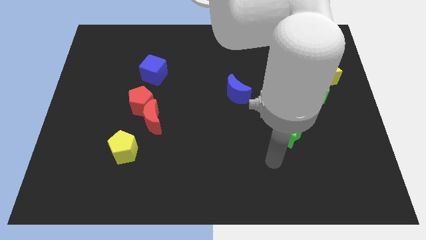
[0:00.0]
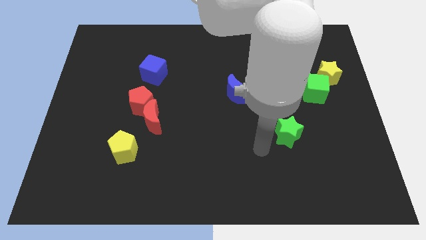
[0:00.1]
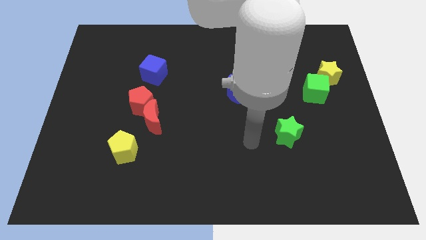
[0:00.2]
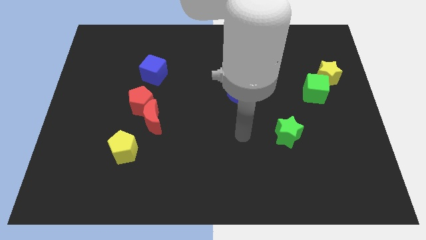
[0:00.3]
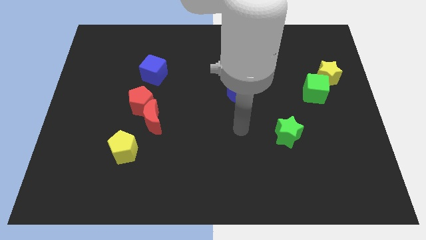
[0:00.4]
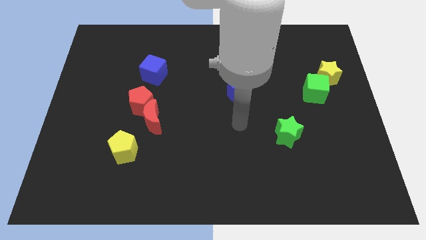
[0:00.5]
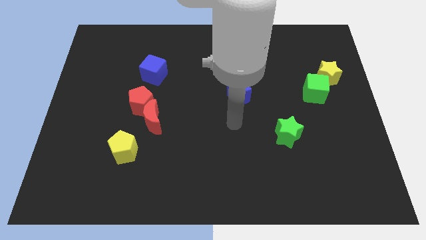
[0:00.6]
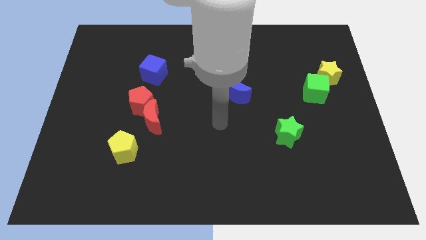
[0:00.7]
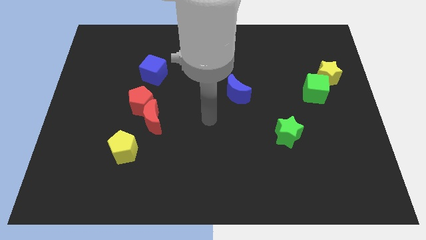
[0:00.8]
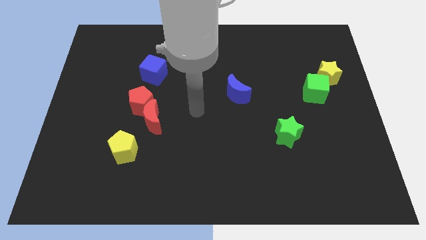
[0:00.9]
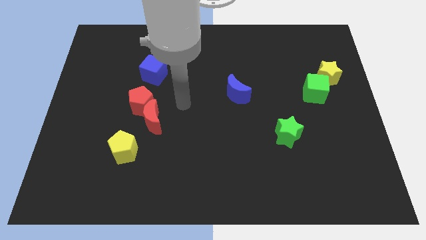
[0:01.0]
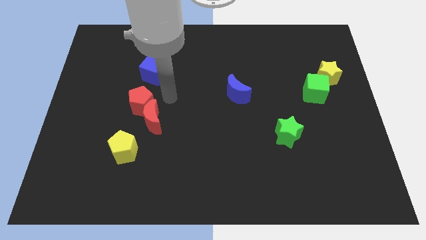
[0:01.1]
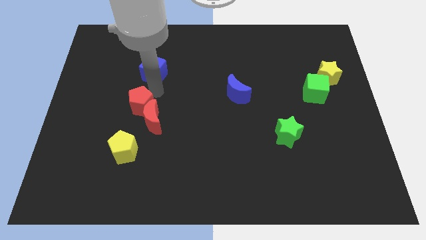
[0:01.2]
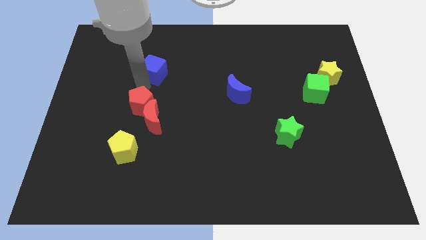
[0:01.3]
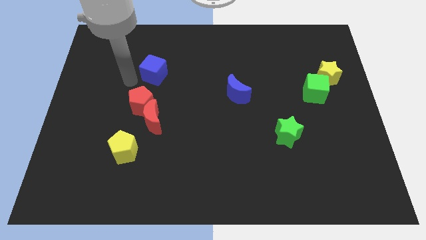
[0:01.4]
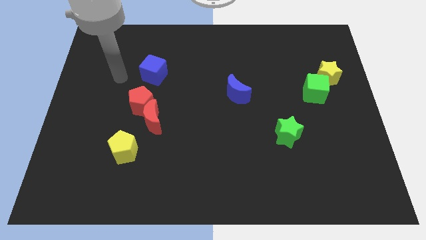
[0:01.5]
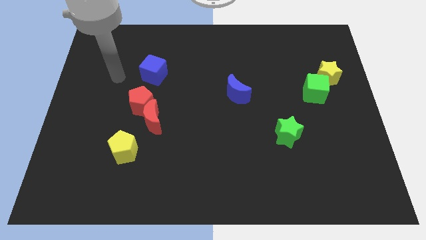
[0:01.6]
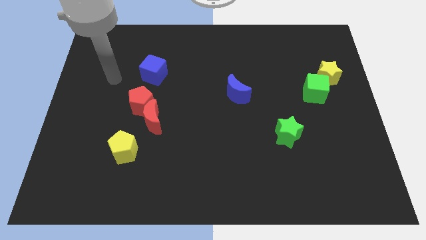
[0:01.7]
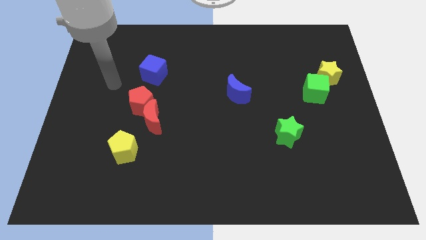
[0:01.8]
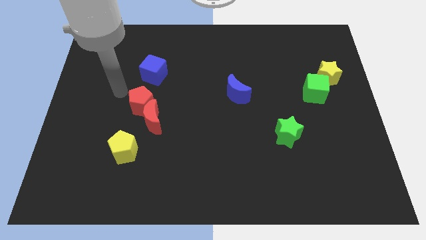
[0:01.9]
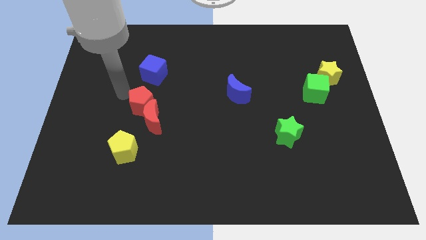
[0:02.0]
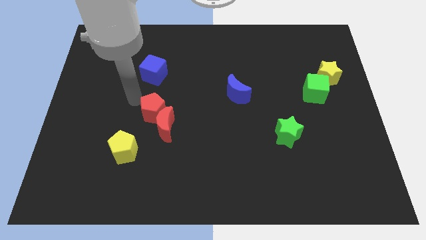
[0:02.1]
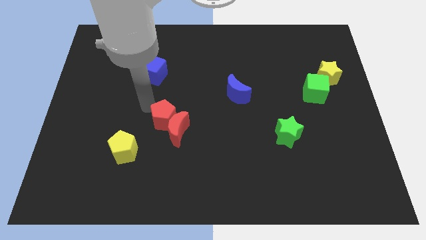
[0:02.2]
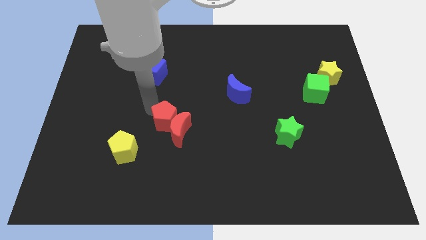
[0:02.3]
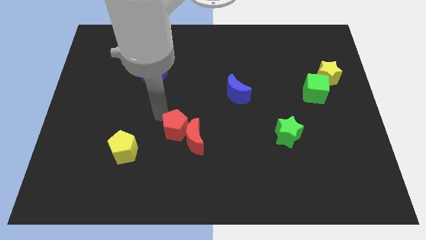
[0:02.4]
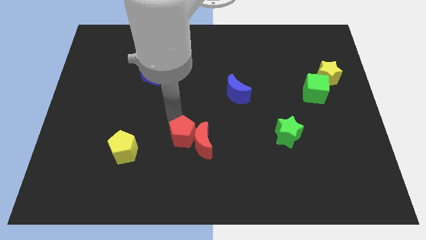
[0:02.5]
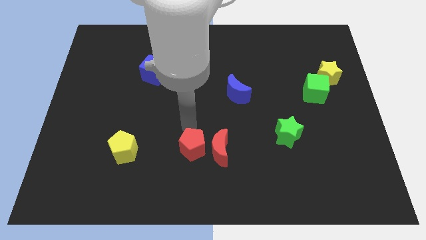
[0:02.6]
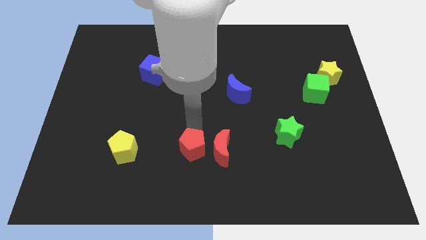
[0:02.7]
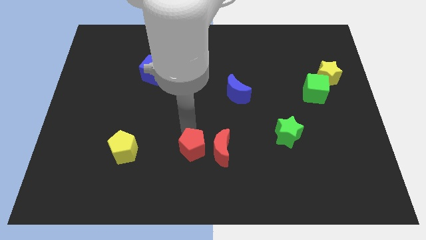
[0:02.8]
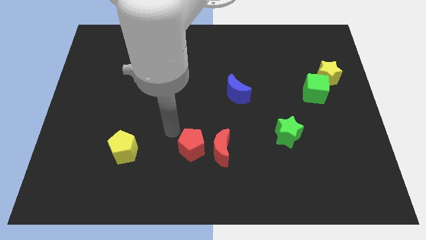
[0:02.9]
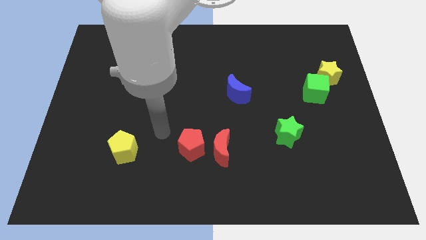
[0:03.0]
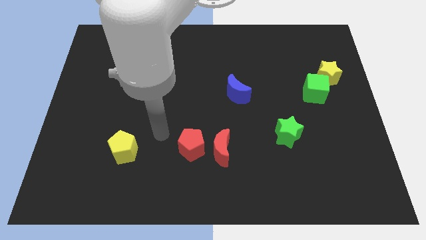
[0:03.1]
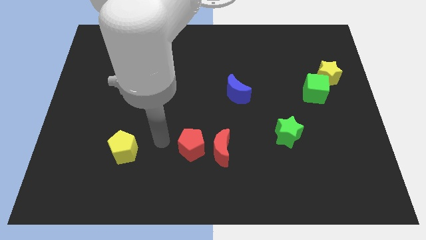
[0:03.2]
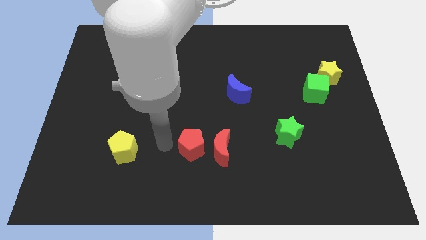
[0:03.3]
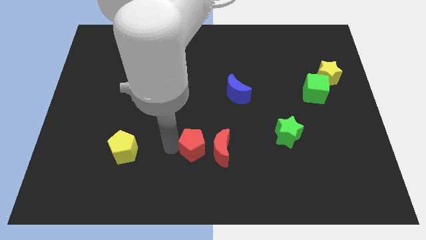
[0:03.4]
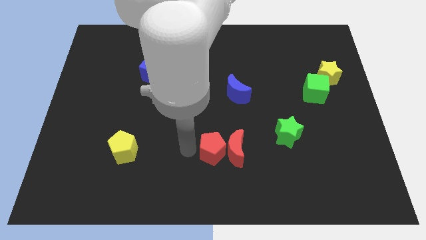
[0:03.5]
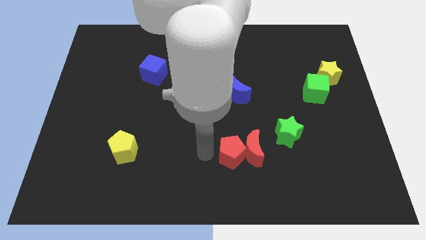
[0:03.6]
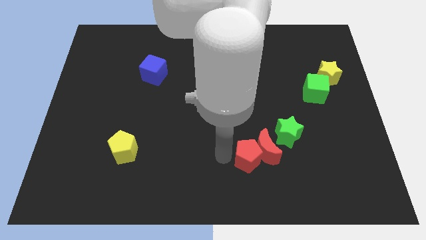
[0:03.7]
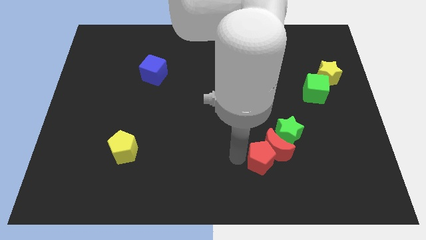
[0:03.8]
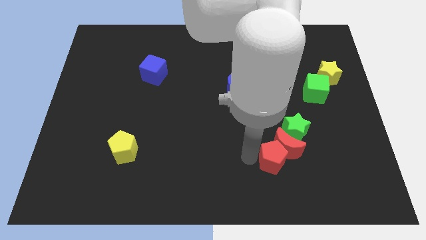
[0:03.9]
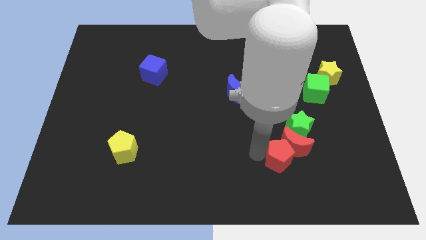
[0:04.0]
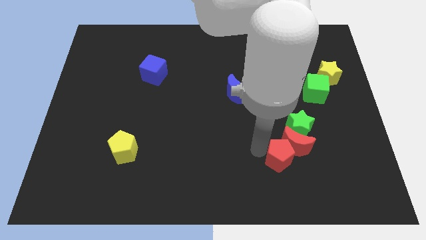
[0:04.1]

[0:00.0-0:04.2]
move the red pentagon into the red crescent

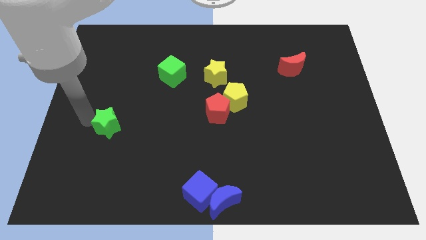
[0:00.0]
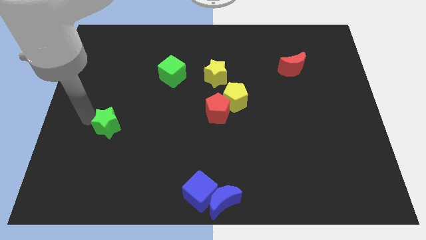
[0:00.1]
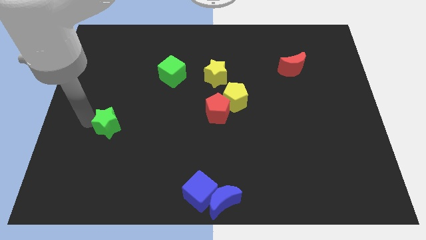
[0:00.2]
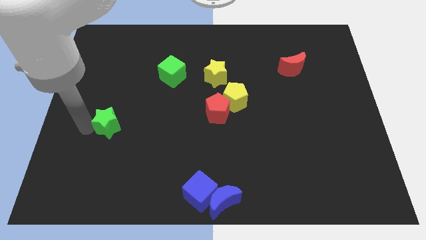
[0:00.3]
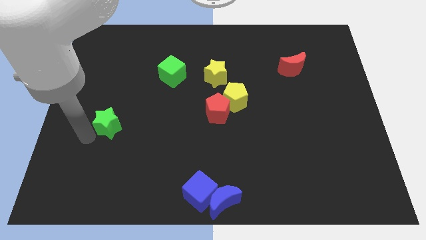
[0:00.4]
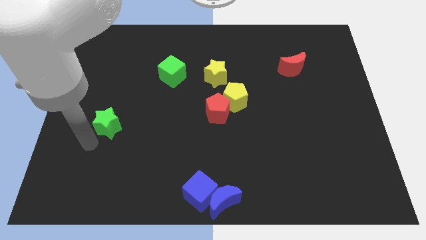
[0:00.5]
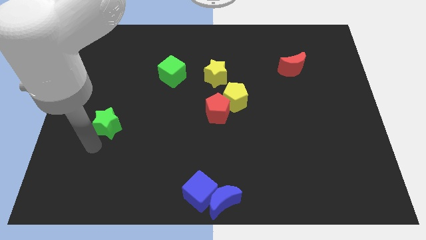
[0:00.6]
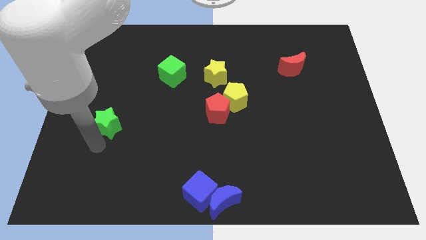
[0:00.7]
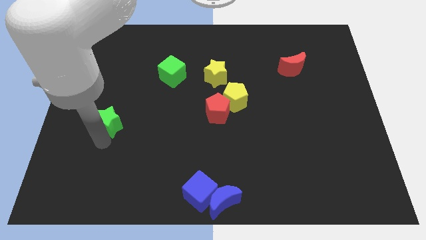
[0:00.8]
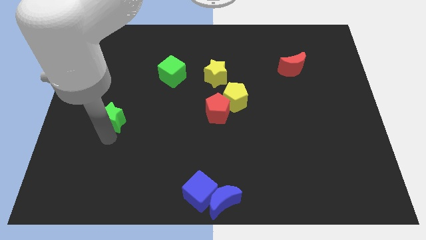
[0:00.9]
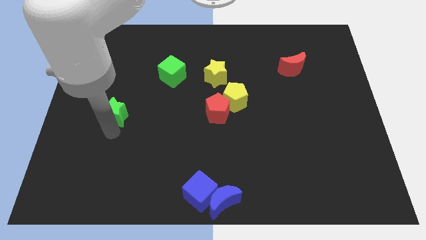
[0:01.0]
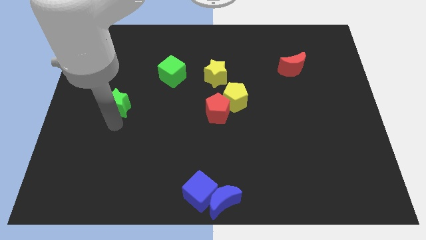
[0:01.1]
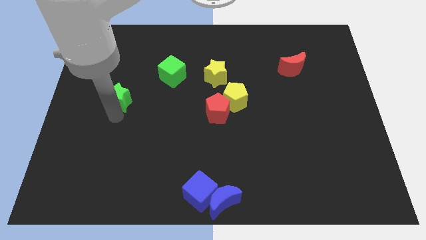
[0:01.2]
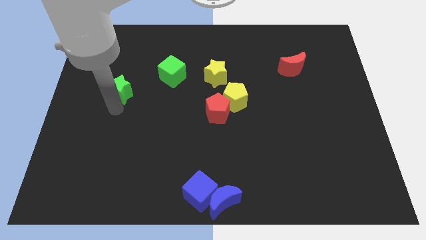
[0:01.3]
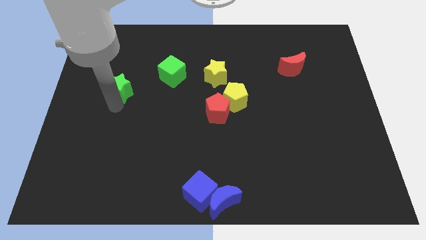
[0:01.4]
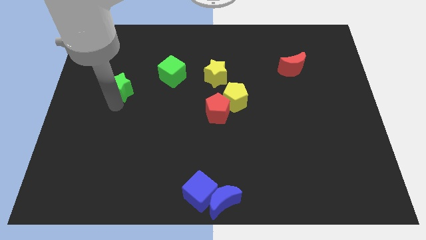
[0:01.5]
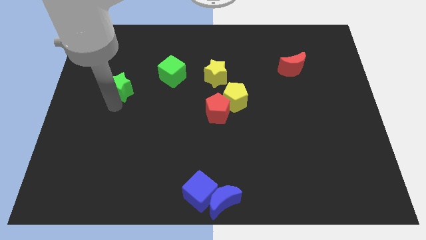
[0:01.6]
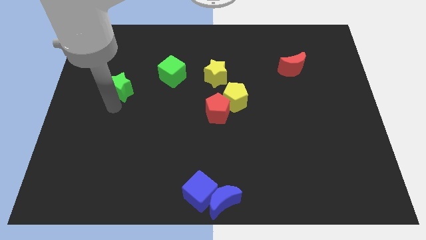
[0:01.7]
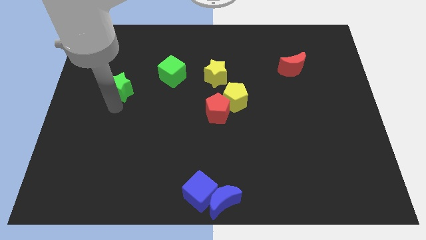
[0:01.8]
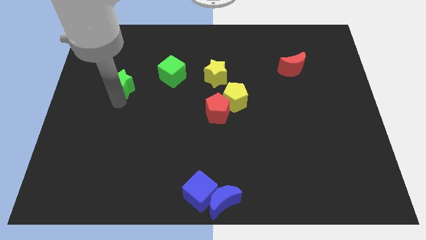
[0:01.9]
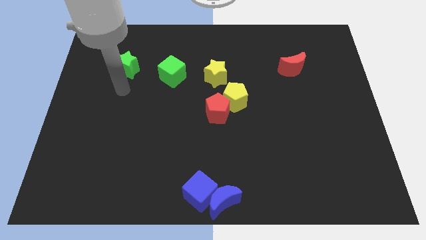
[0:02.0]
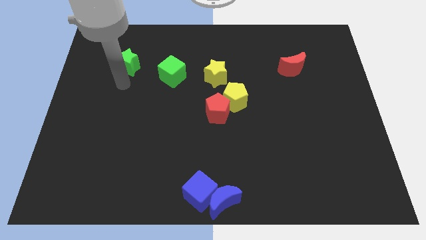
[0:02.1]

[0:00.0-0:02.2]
place the green star close to green cube on the left

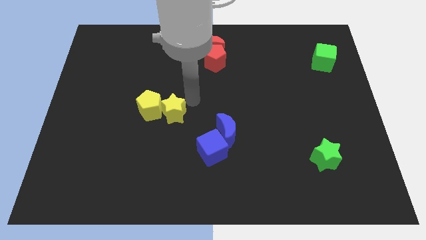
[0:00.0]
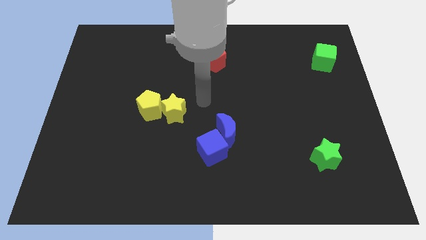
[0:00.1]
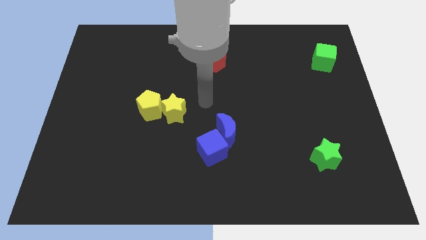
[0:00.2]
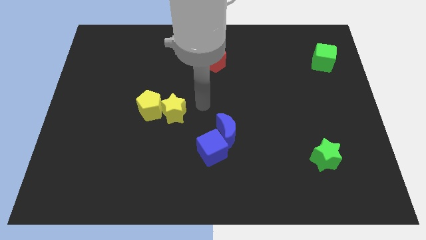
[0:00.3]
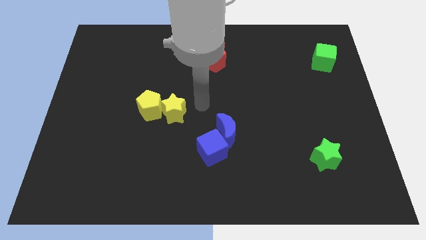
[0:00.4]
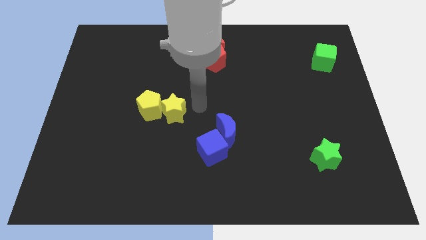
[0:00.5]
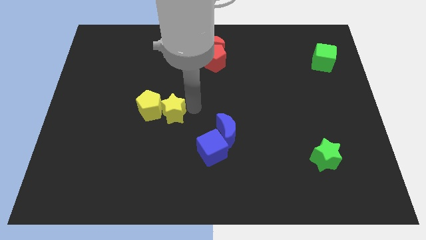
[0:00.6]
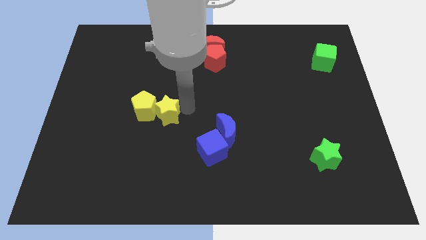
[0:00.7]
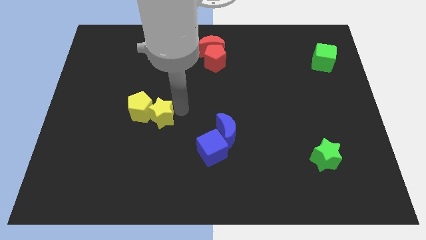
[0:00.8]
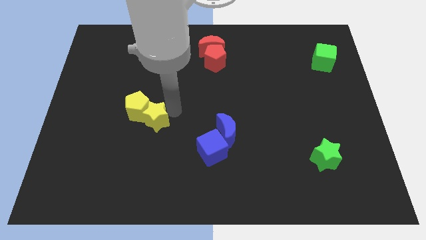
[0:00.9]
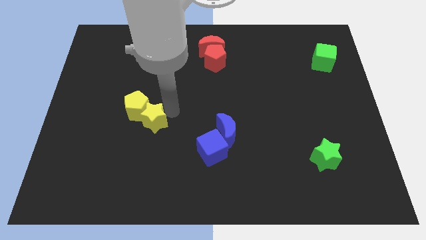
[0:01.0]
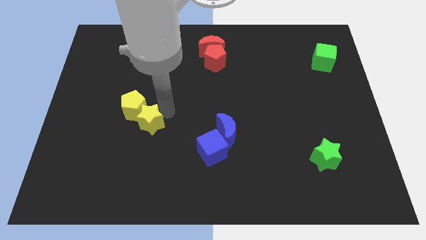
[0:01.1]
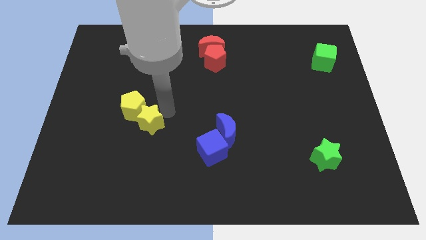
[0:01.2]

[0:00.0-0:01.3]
move both the yellow blocks towards the left side of the board

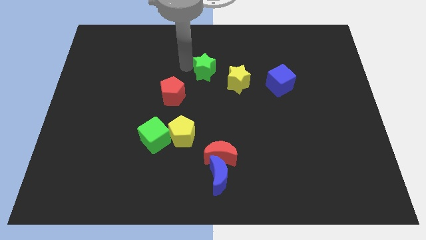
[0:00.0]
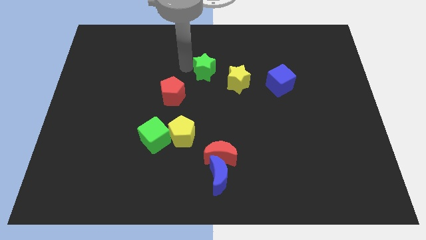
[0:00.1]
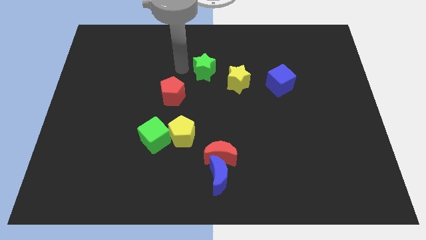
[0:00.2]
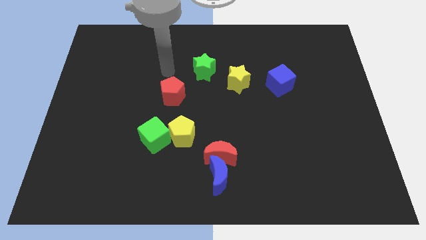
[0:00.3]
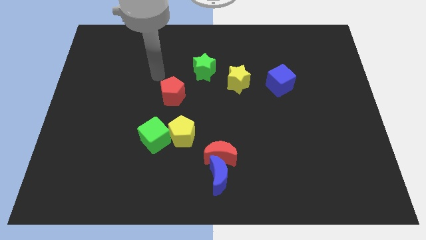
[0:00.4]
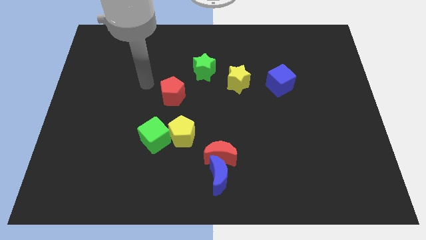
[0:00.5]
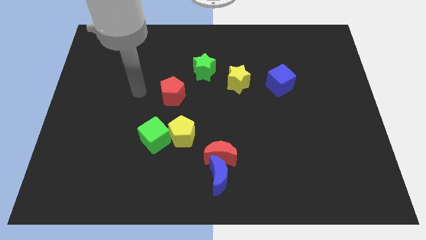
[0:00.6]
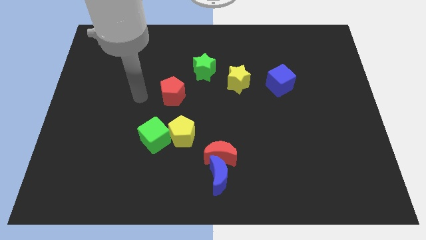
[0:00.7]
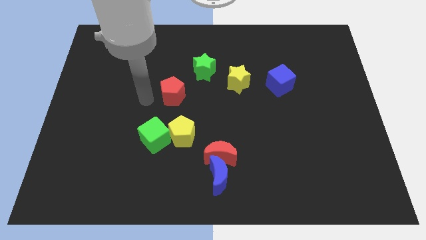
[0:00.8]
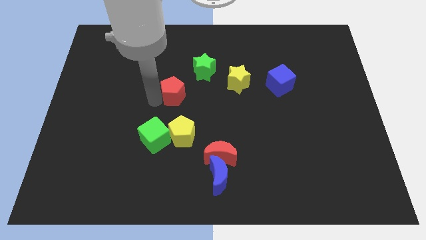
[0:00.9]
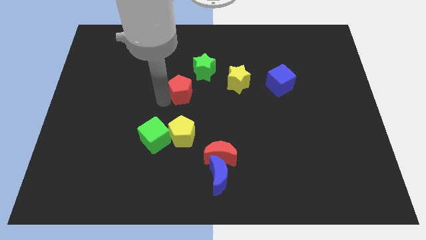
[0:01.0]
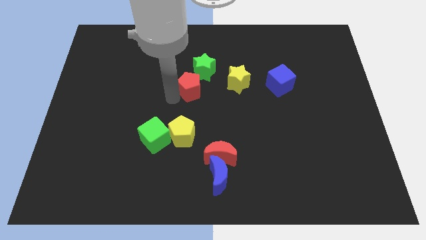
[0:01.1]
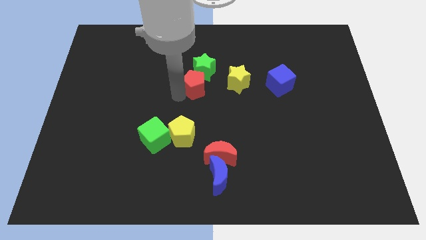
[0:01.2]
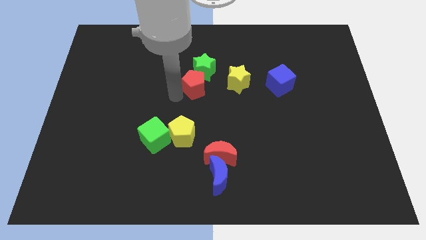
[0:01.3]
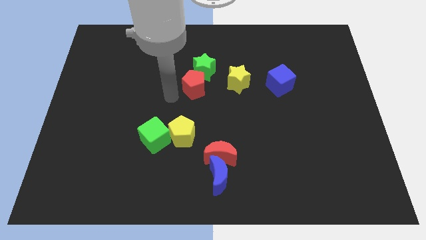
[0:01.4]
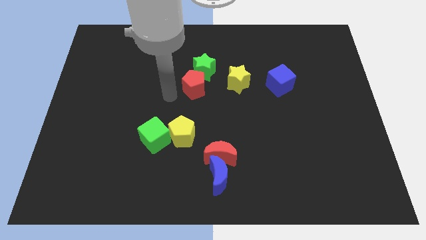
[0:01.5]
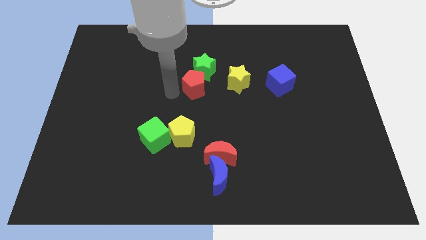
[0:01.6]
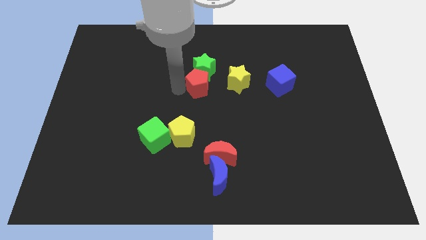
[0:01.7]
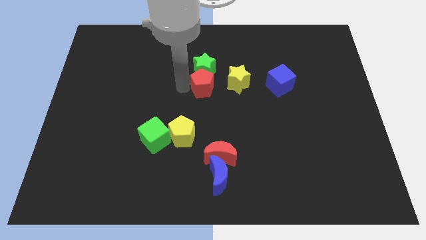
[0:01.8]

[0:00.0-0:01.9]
push the red pentagon into the green star
